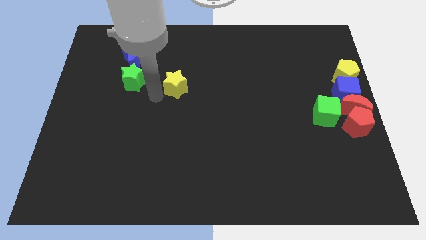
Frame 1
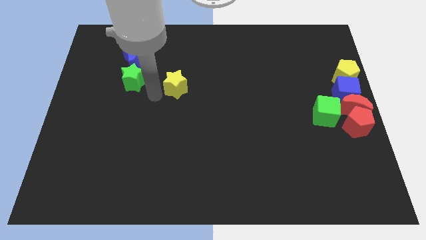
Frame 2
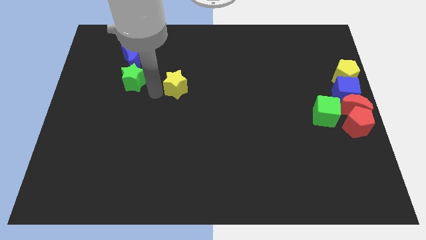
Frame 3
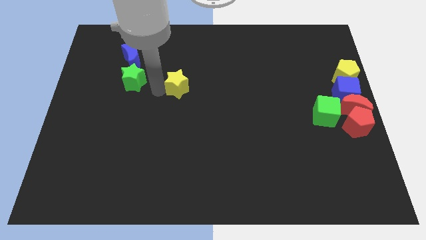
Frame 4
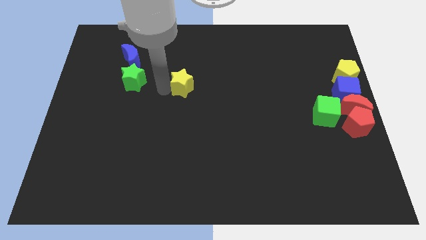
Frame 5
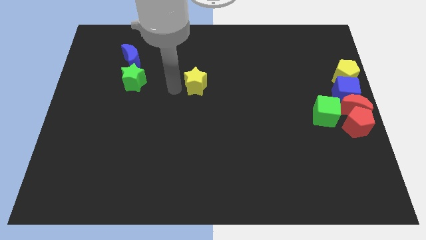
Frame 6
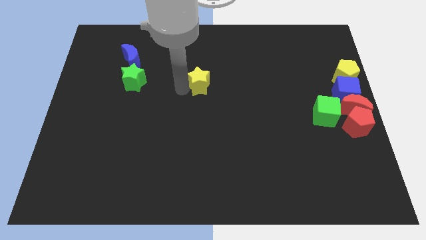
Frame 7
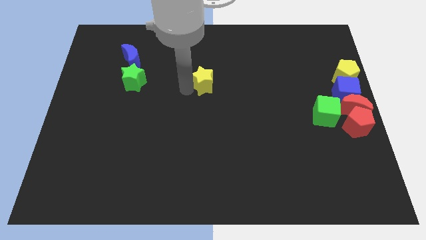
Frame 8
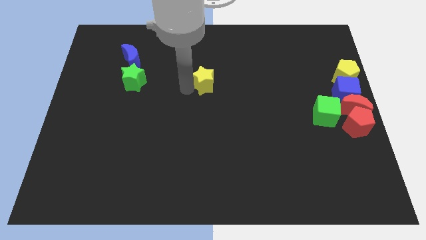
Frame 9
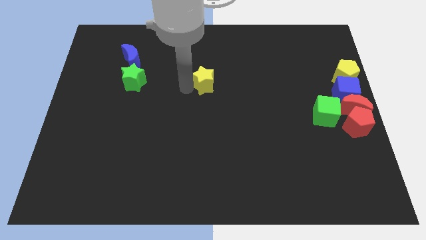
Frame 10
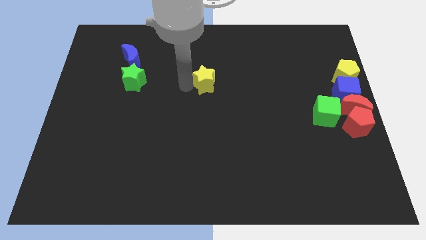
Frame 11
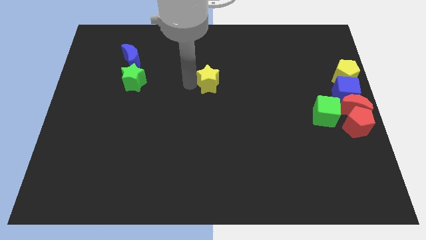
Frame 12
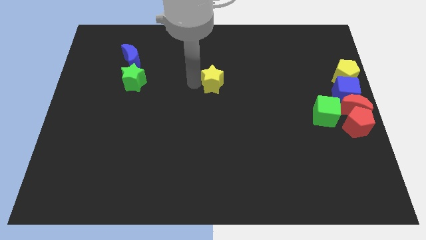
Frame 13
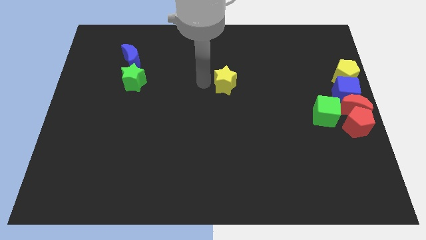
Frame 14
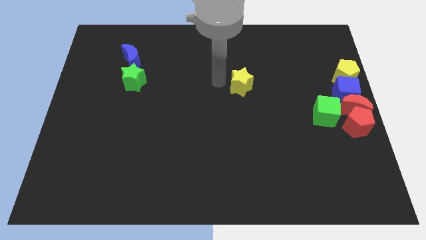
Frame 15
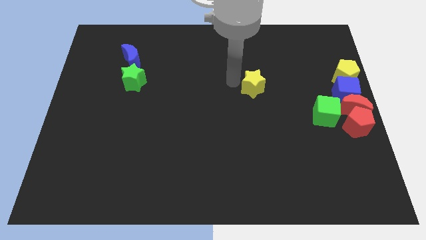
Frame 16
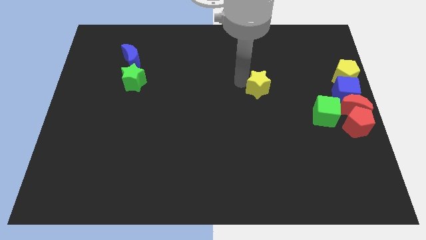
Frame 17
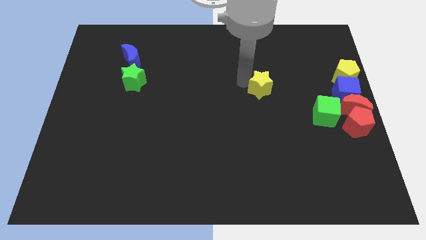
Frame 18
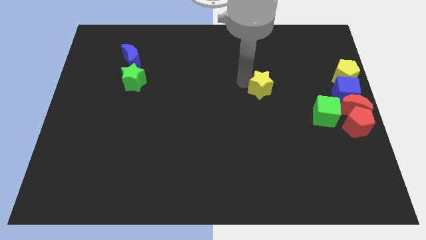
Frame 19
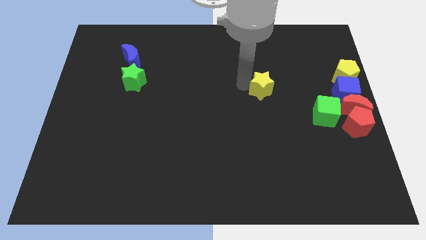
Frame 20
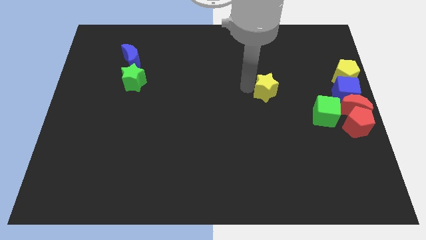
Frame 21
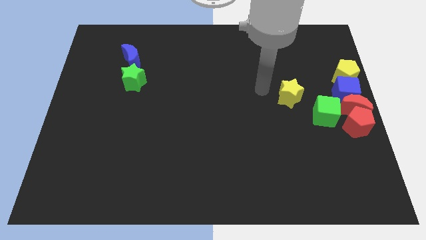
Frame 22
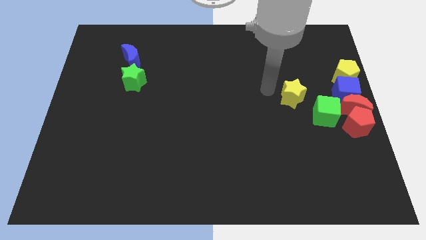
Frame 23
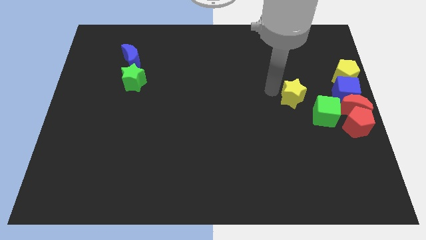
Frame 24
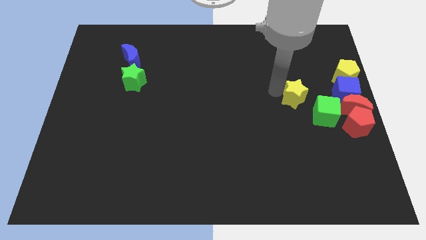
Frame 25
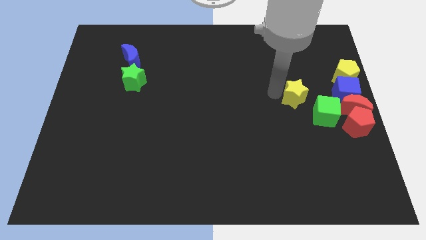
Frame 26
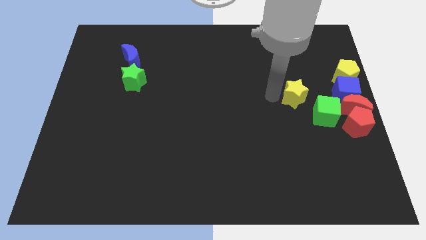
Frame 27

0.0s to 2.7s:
push the yellow star towards the green cube

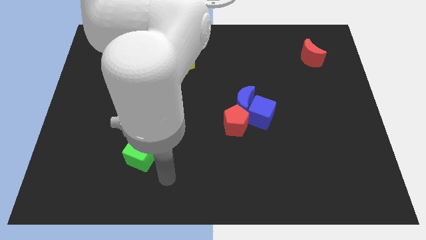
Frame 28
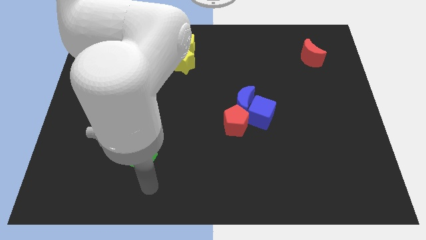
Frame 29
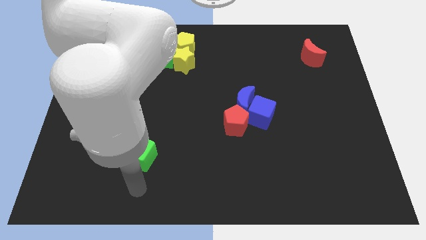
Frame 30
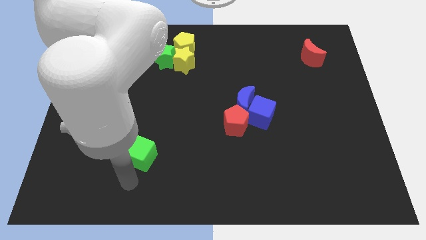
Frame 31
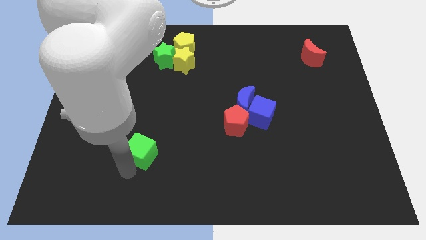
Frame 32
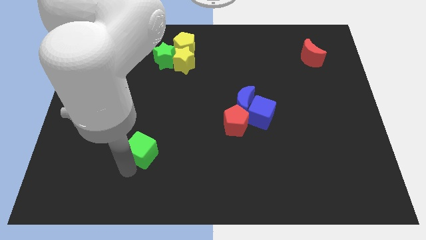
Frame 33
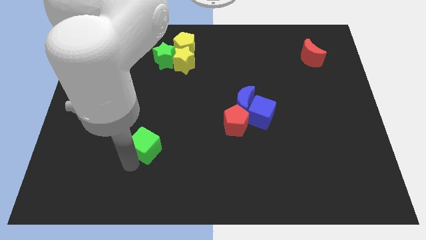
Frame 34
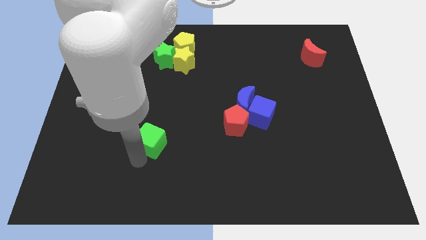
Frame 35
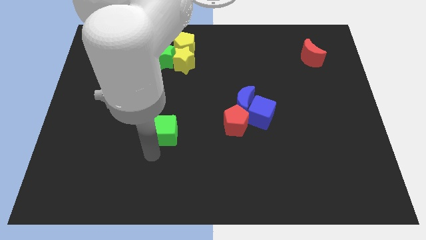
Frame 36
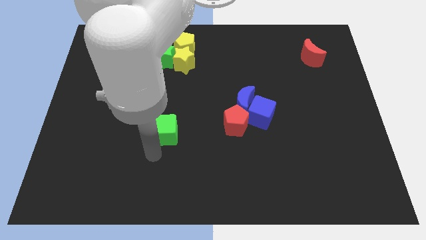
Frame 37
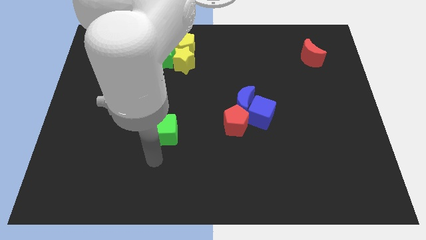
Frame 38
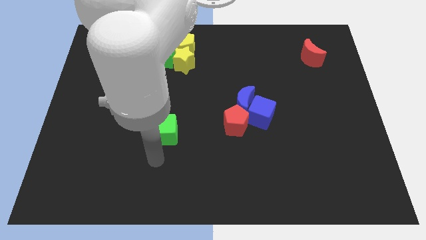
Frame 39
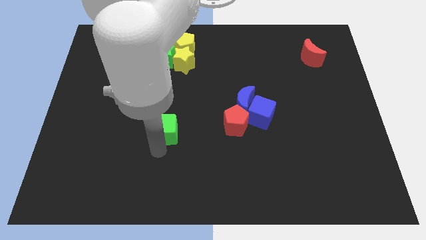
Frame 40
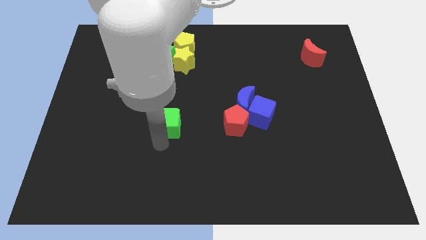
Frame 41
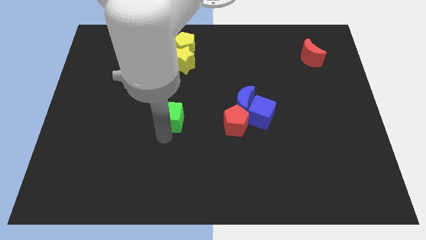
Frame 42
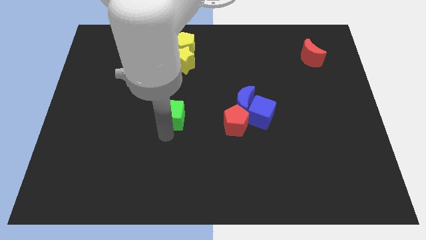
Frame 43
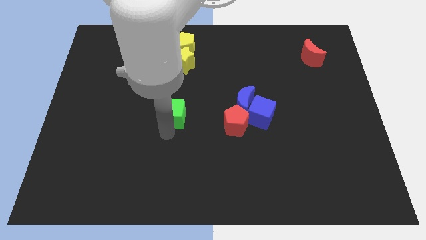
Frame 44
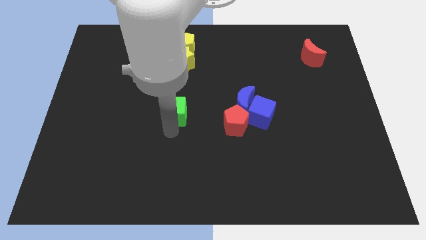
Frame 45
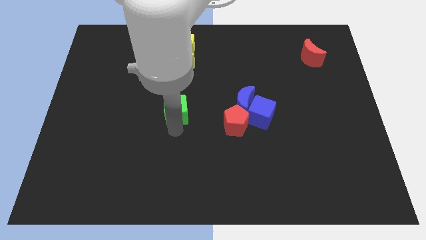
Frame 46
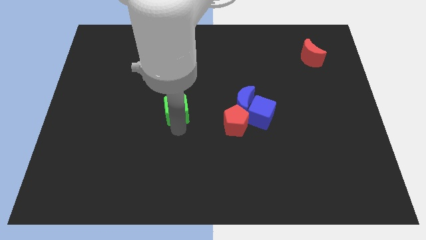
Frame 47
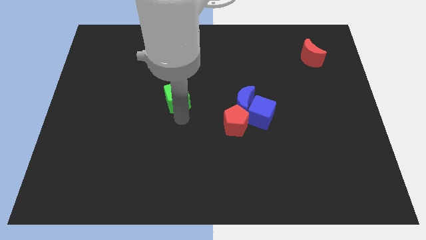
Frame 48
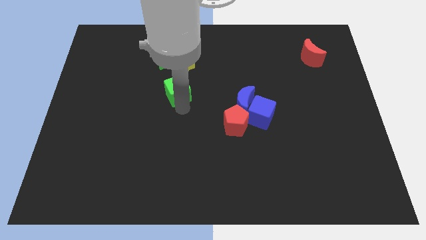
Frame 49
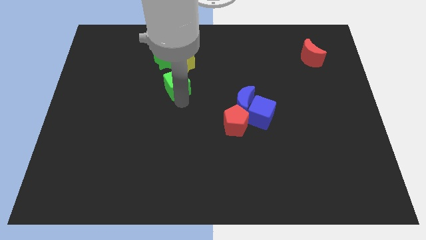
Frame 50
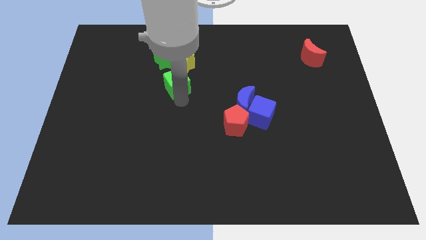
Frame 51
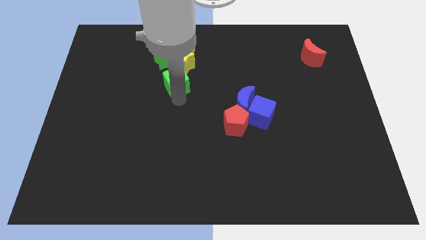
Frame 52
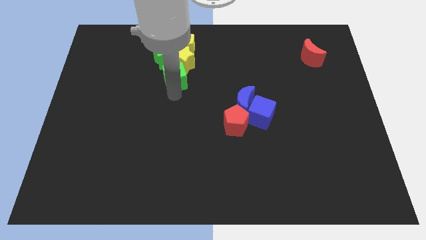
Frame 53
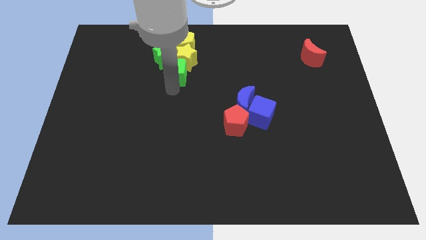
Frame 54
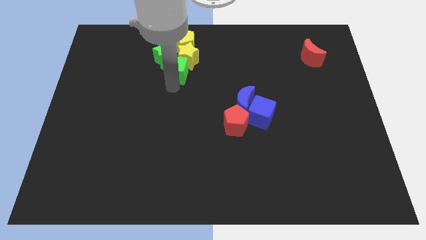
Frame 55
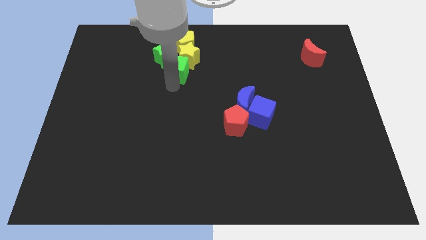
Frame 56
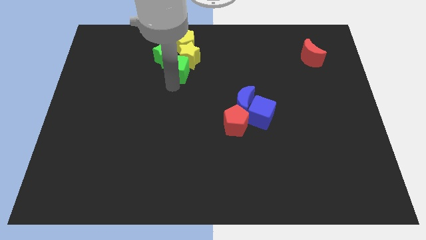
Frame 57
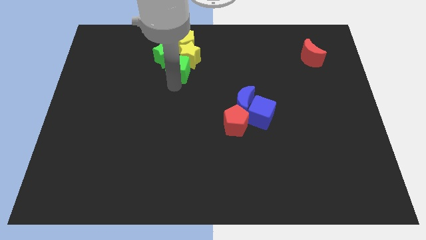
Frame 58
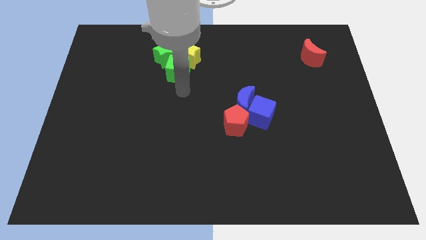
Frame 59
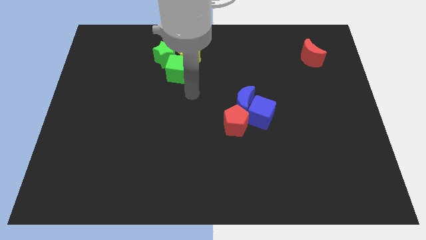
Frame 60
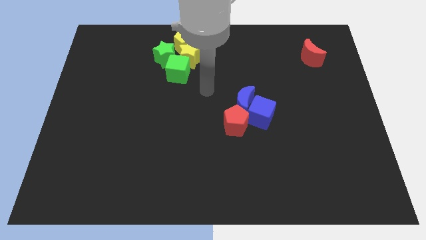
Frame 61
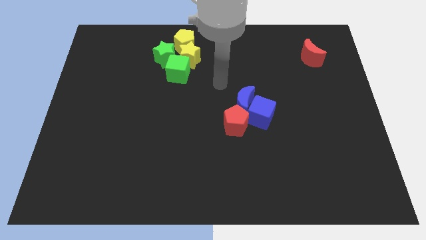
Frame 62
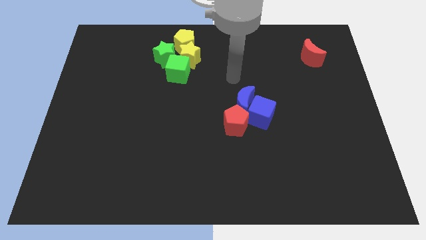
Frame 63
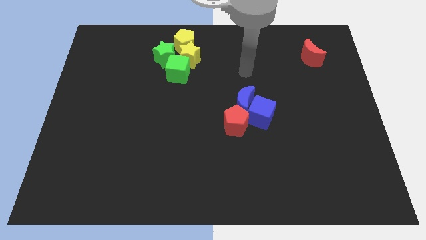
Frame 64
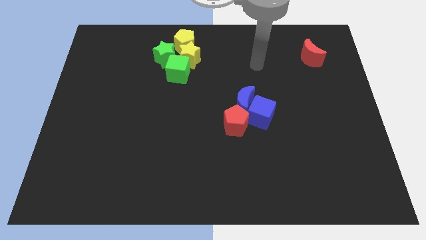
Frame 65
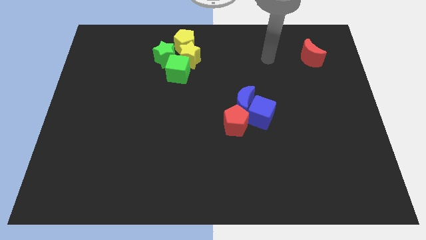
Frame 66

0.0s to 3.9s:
push the green cube into the yellow star

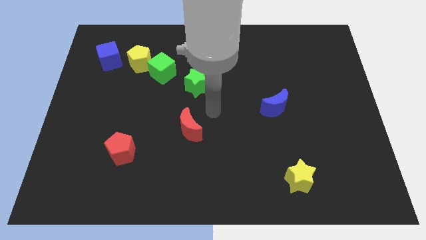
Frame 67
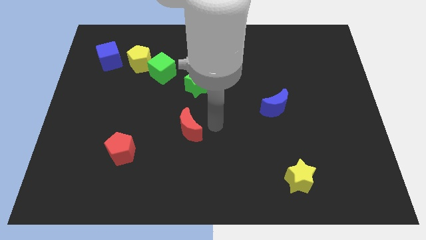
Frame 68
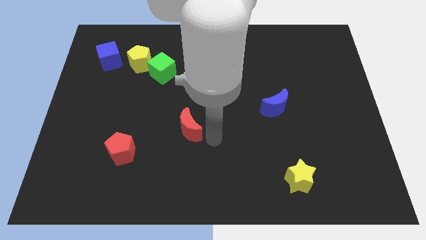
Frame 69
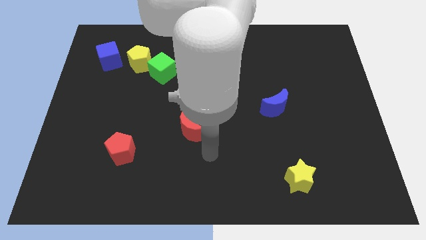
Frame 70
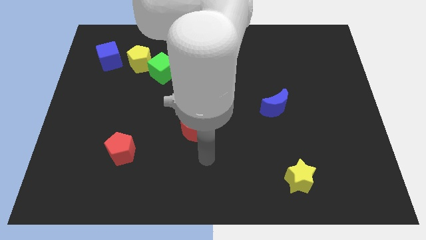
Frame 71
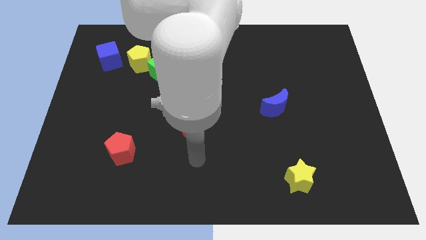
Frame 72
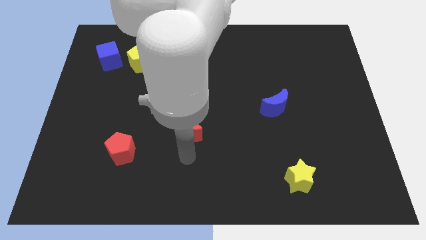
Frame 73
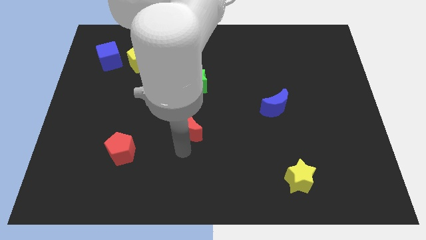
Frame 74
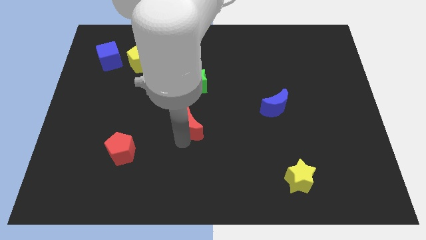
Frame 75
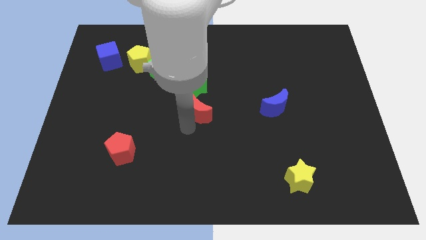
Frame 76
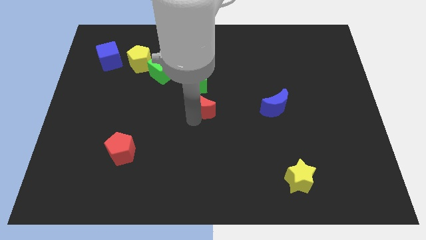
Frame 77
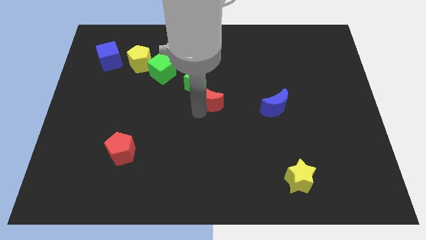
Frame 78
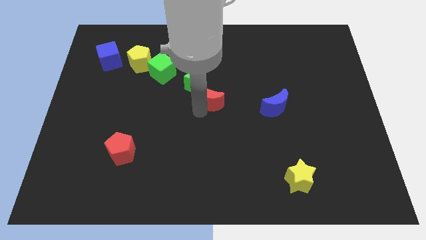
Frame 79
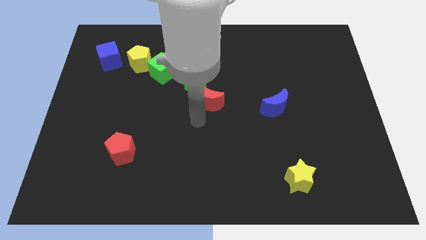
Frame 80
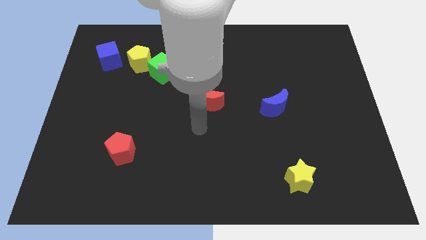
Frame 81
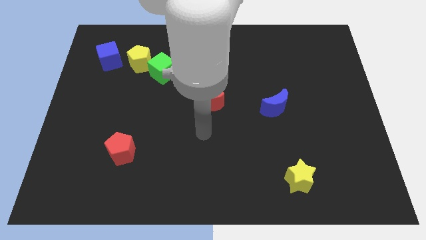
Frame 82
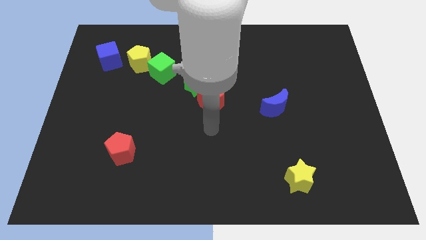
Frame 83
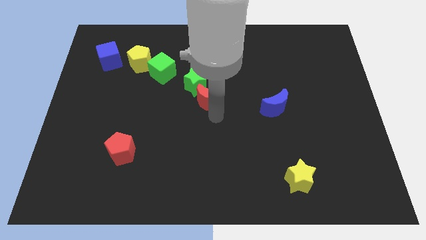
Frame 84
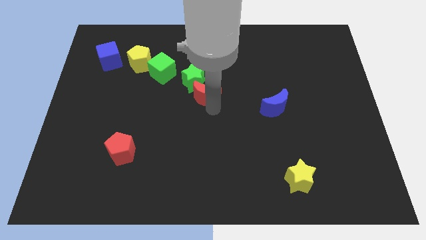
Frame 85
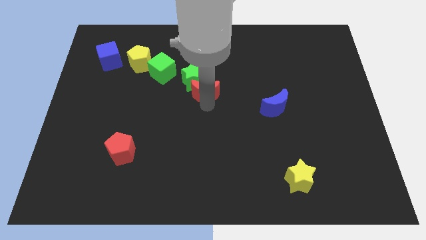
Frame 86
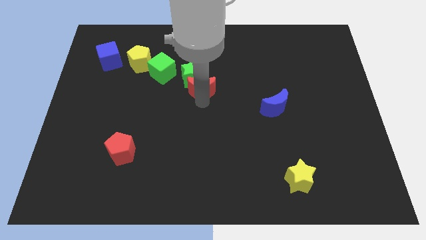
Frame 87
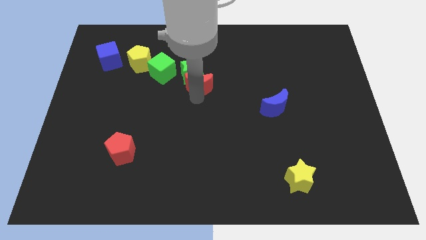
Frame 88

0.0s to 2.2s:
move the red moon to bottom of green star

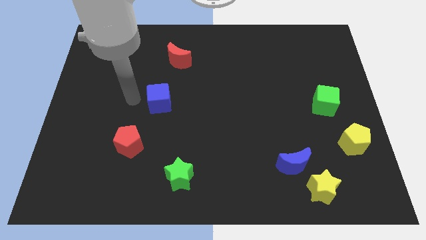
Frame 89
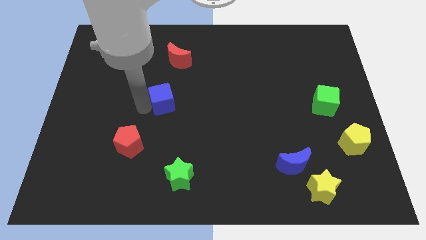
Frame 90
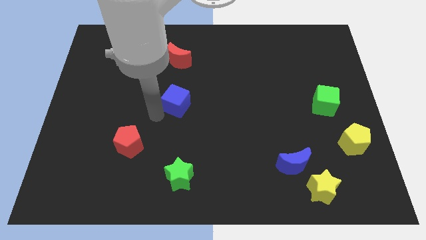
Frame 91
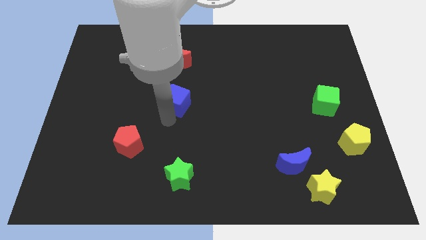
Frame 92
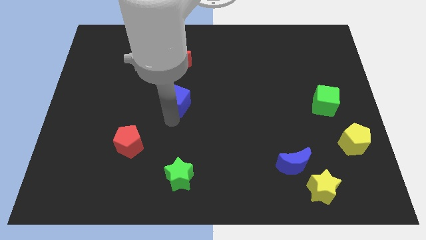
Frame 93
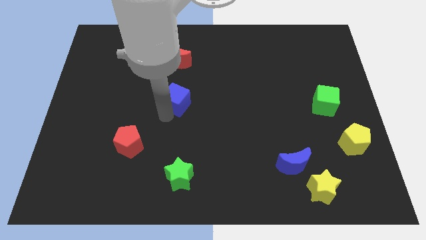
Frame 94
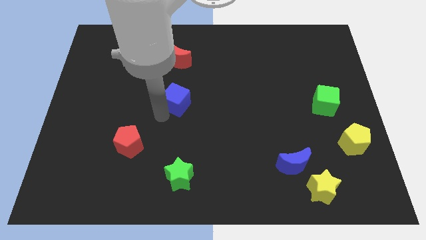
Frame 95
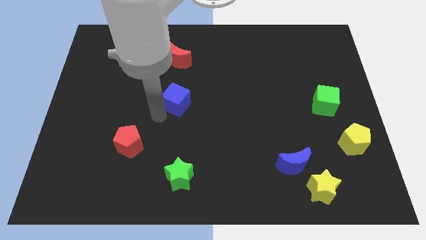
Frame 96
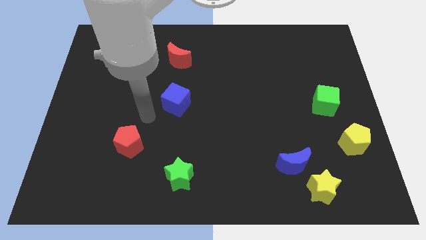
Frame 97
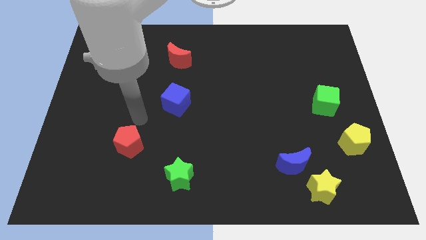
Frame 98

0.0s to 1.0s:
push the blue cube towards the center of the board
